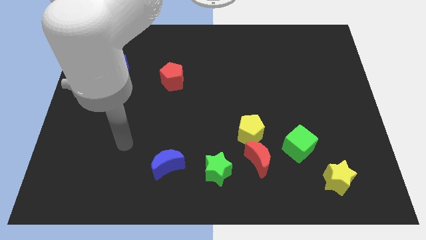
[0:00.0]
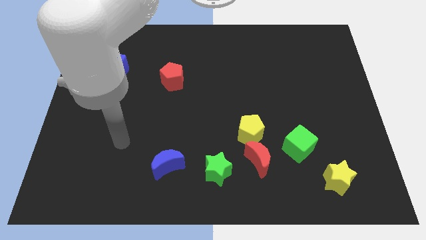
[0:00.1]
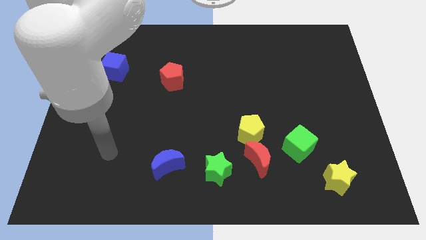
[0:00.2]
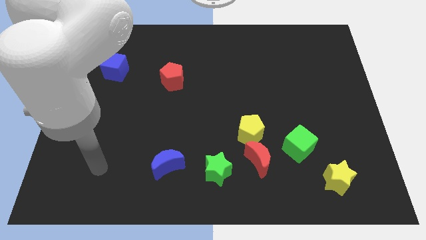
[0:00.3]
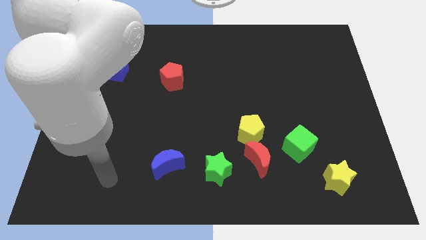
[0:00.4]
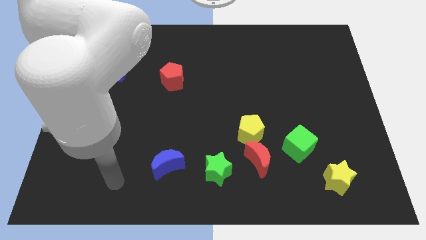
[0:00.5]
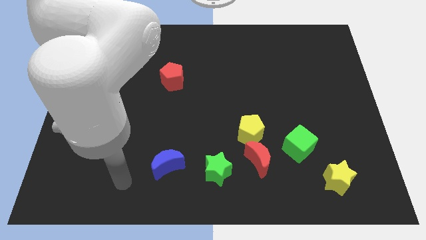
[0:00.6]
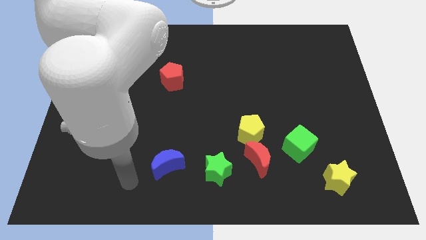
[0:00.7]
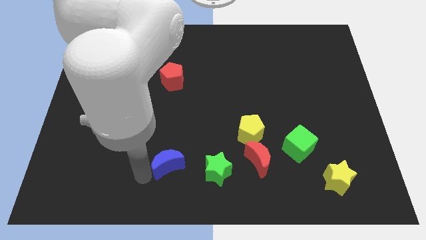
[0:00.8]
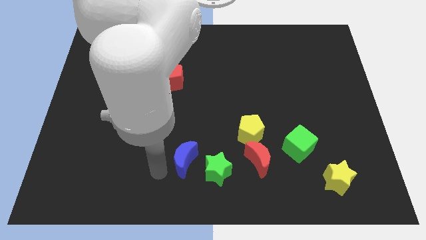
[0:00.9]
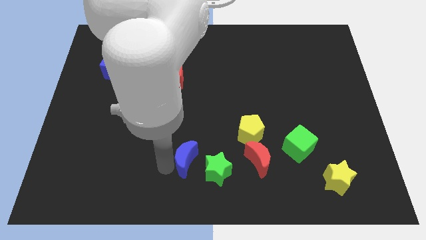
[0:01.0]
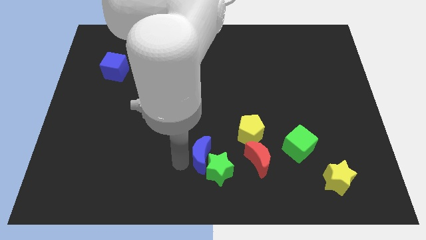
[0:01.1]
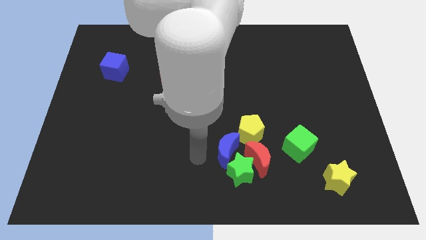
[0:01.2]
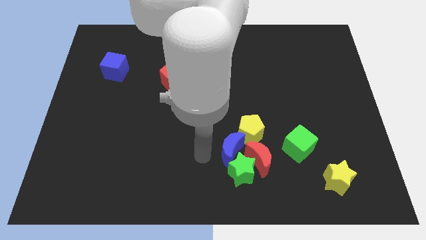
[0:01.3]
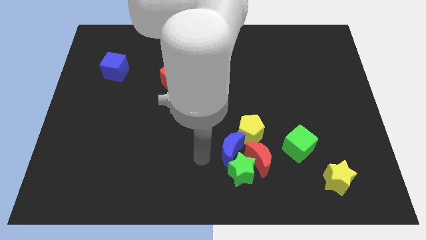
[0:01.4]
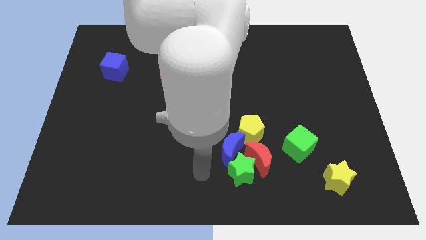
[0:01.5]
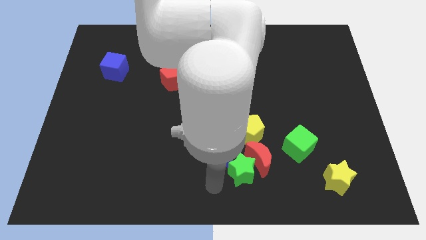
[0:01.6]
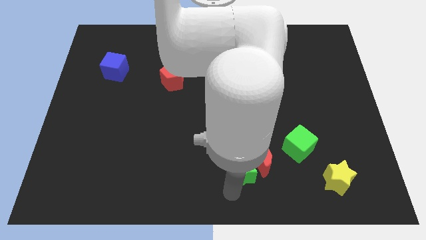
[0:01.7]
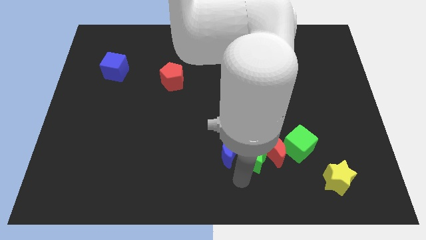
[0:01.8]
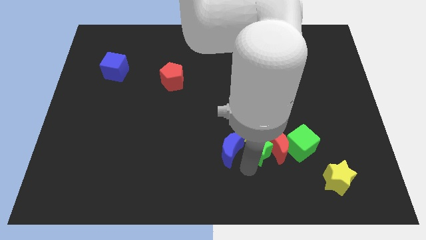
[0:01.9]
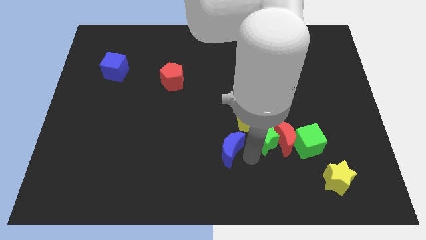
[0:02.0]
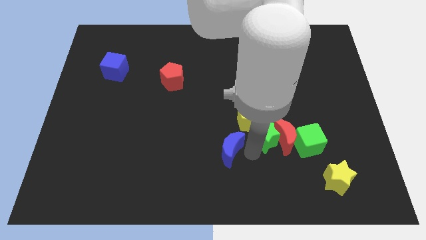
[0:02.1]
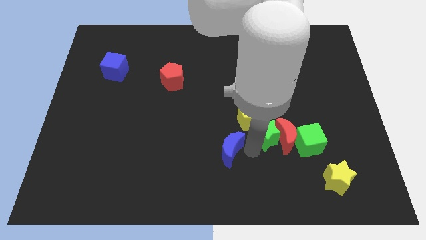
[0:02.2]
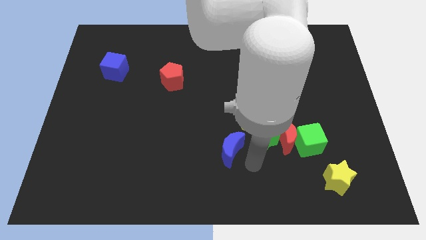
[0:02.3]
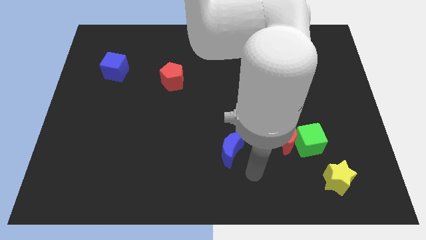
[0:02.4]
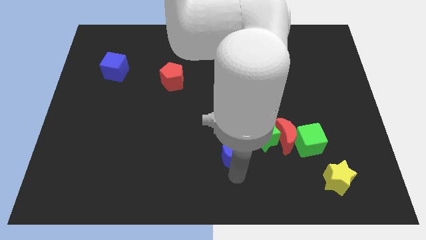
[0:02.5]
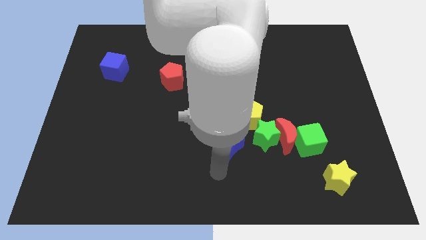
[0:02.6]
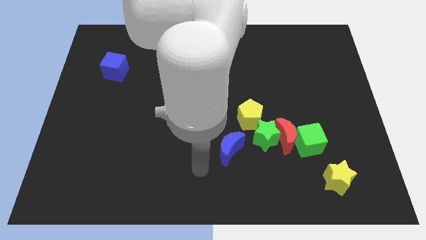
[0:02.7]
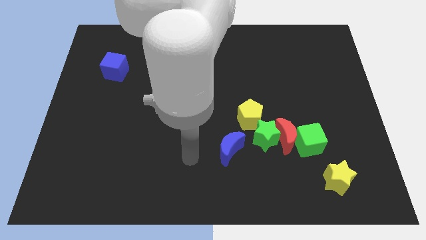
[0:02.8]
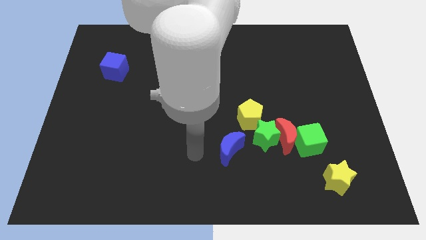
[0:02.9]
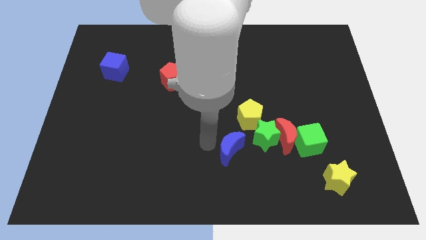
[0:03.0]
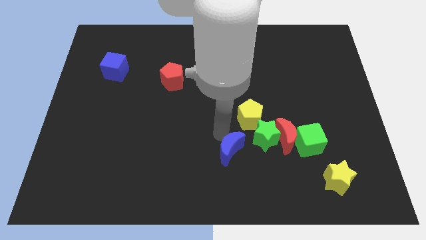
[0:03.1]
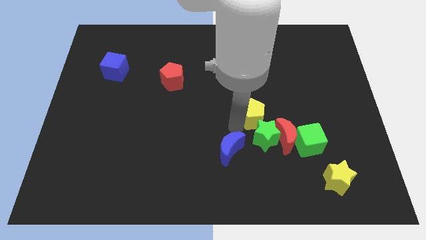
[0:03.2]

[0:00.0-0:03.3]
push the blue crescent near to the group of blocks

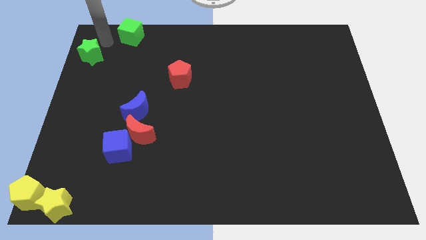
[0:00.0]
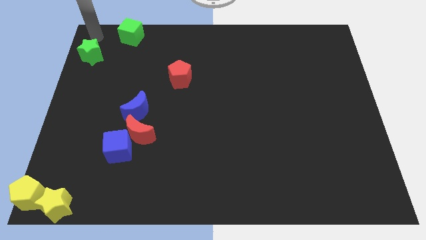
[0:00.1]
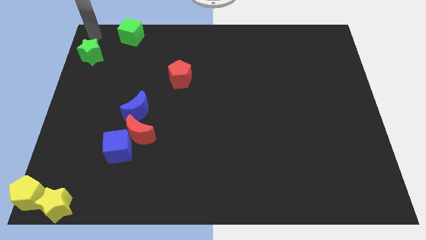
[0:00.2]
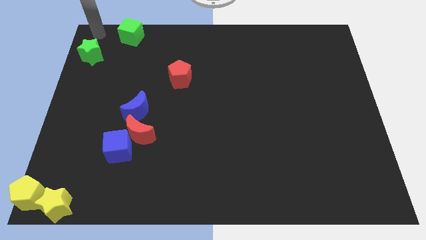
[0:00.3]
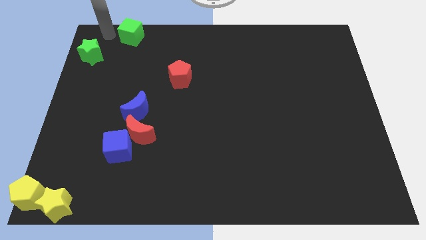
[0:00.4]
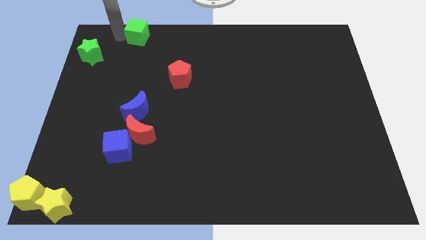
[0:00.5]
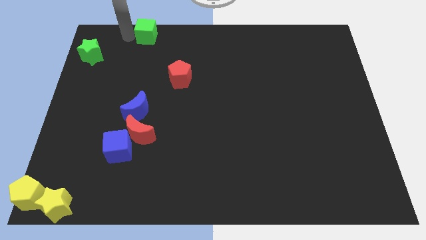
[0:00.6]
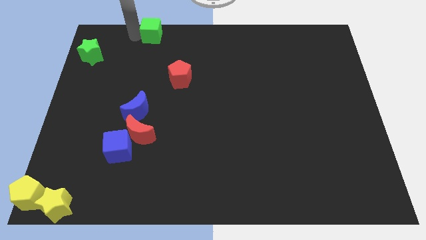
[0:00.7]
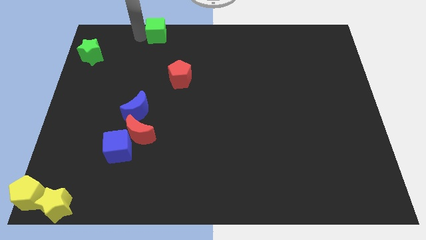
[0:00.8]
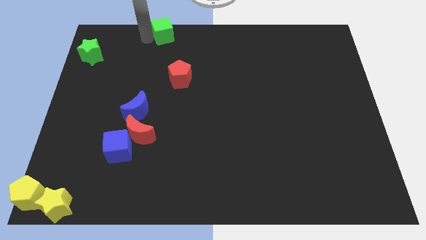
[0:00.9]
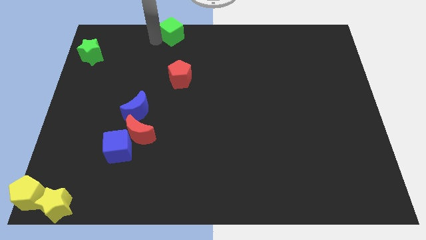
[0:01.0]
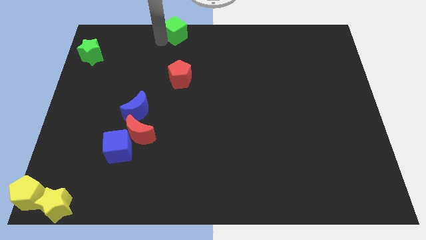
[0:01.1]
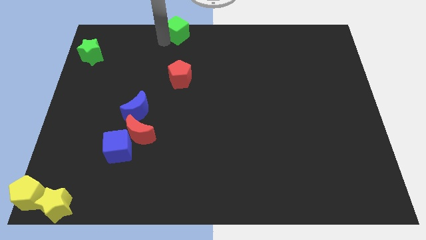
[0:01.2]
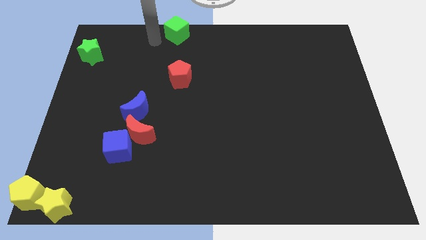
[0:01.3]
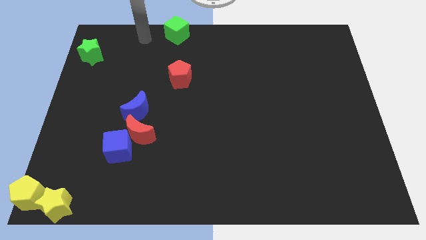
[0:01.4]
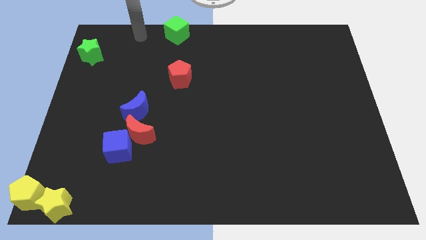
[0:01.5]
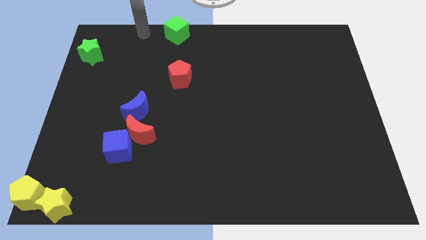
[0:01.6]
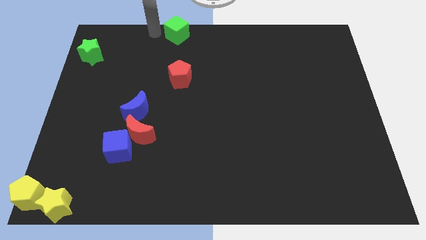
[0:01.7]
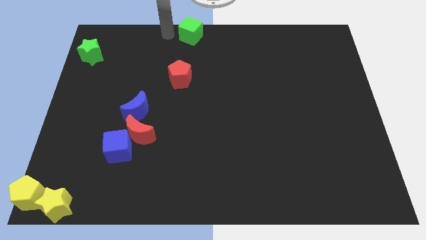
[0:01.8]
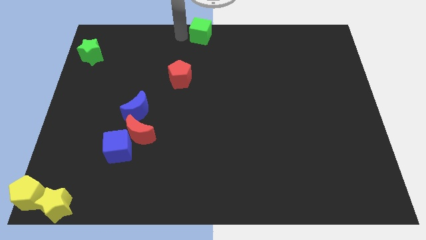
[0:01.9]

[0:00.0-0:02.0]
push the green cube towards the top center

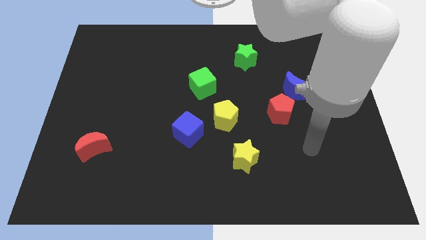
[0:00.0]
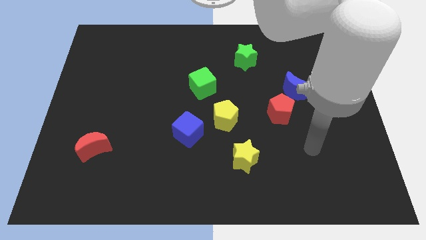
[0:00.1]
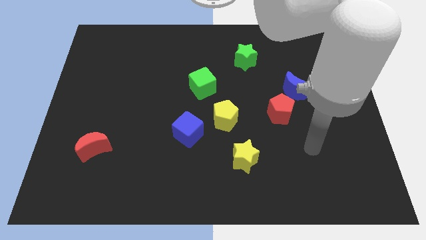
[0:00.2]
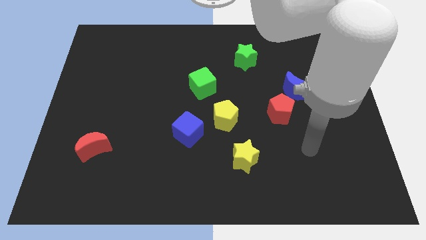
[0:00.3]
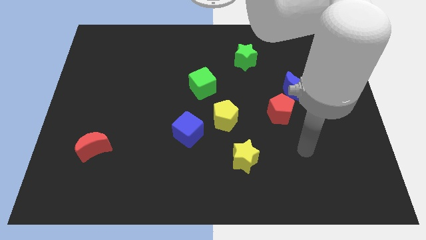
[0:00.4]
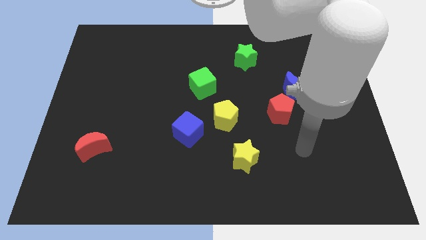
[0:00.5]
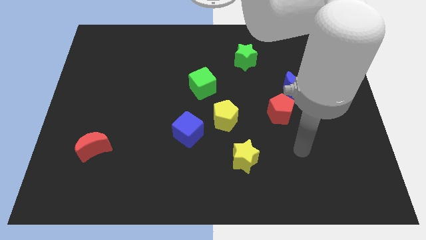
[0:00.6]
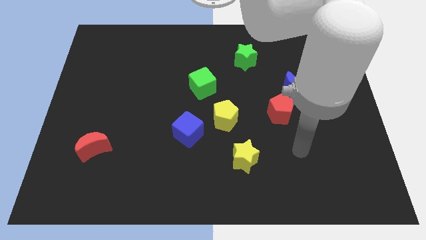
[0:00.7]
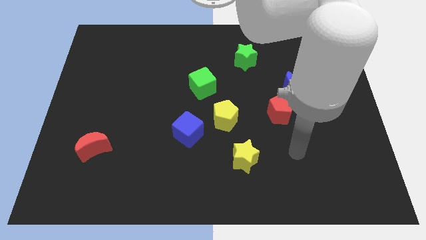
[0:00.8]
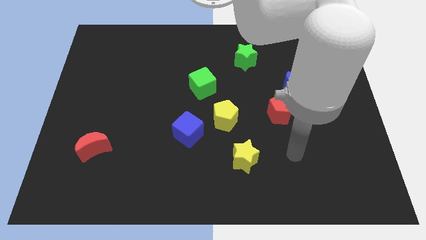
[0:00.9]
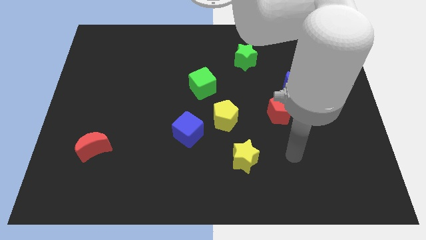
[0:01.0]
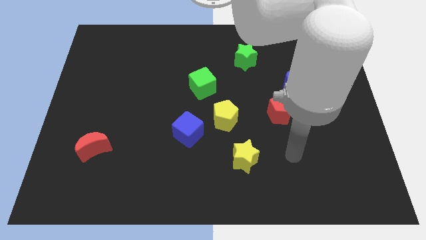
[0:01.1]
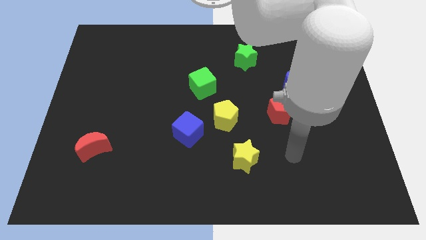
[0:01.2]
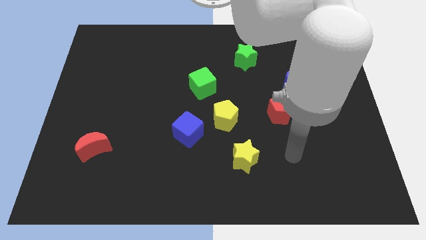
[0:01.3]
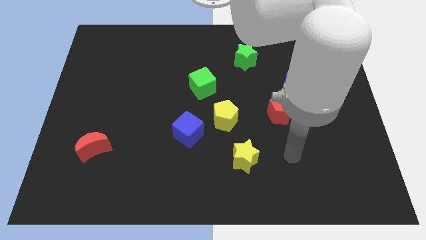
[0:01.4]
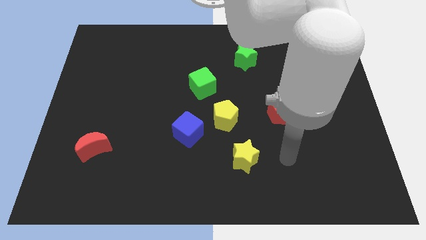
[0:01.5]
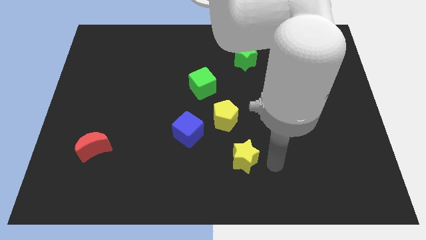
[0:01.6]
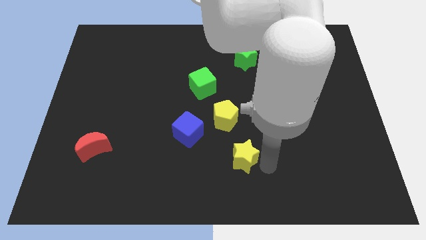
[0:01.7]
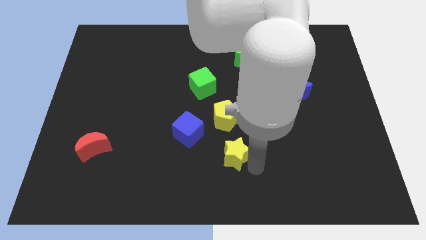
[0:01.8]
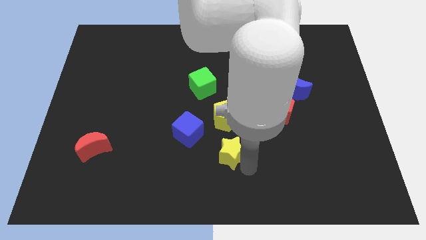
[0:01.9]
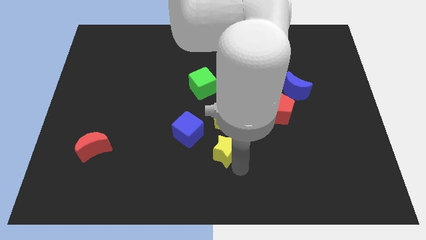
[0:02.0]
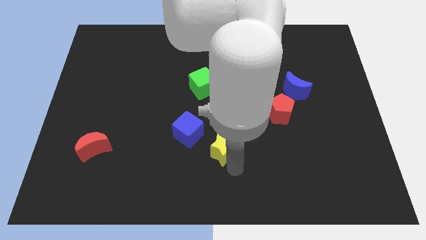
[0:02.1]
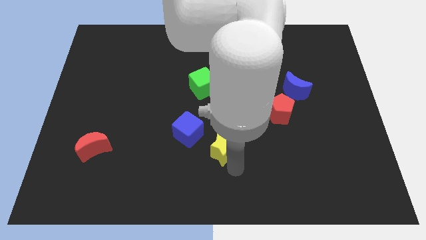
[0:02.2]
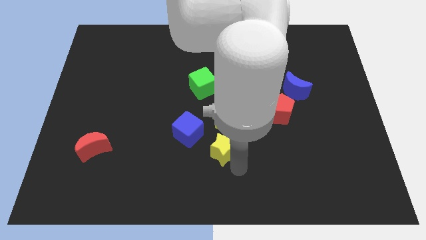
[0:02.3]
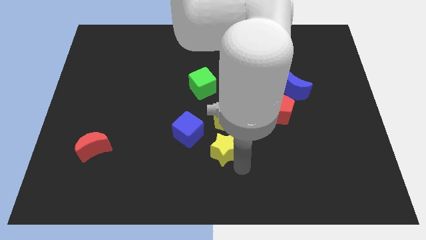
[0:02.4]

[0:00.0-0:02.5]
move the yellow star towards the blue cube

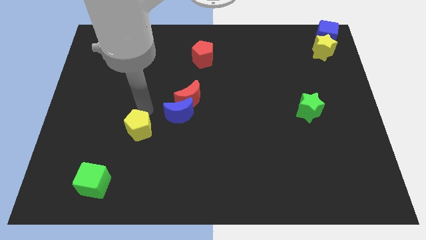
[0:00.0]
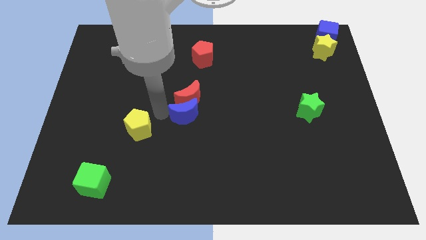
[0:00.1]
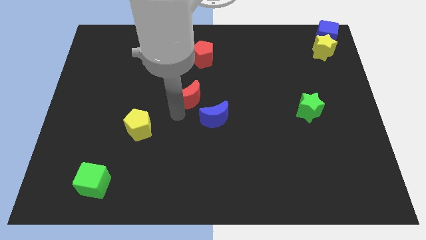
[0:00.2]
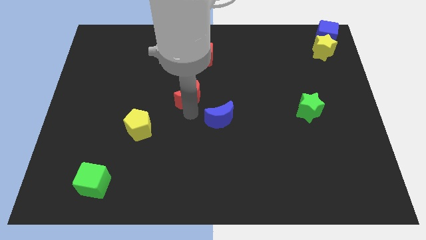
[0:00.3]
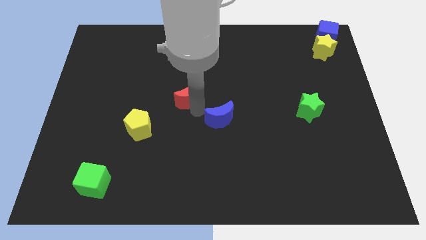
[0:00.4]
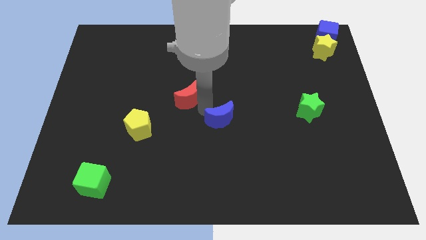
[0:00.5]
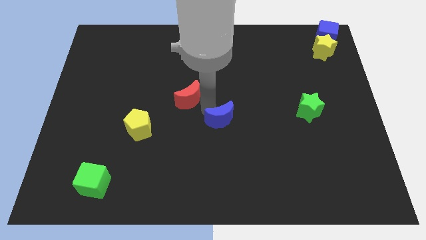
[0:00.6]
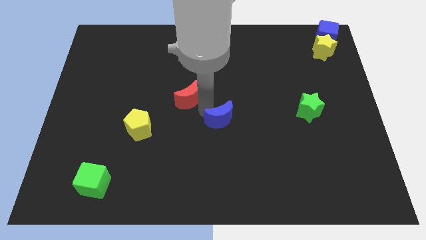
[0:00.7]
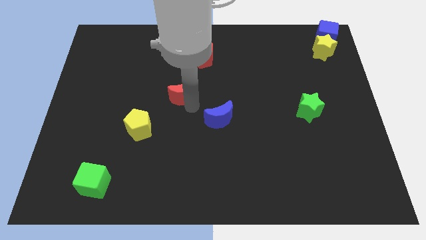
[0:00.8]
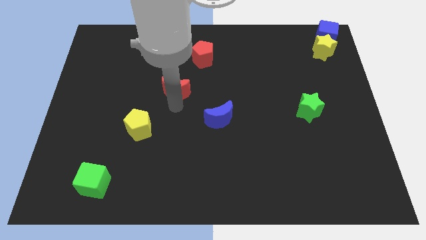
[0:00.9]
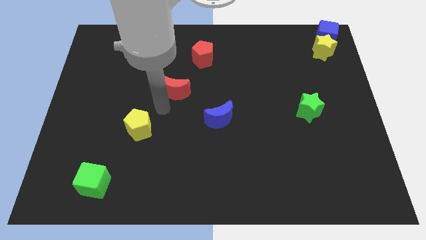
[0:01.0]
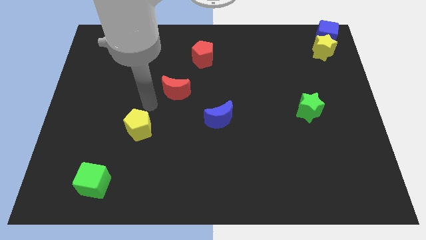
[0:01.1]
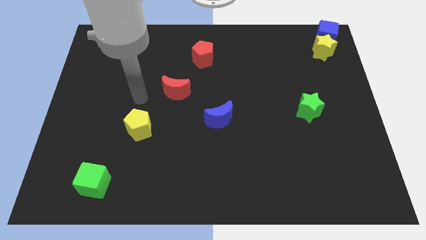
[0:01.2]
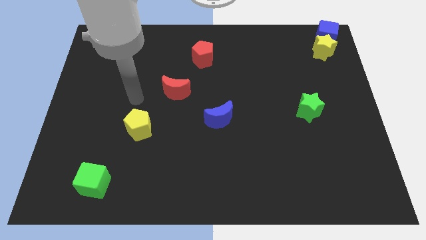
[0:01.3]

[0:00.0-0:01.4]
separate the red and blue crescents

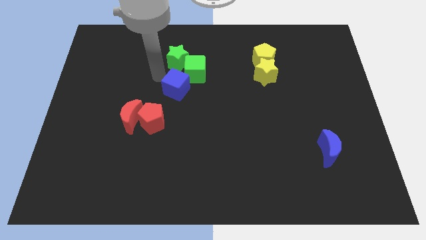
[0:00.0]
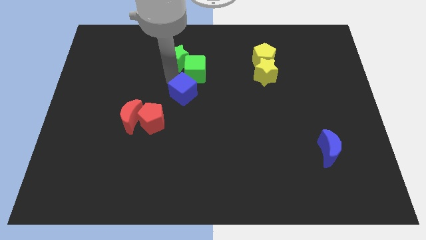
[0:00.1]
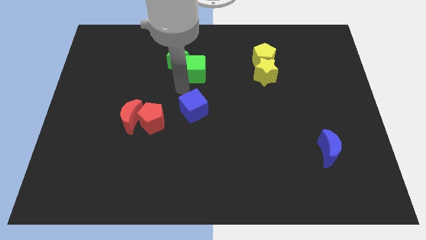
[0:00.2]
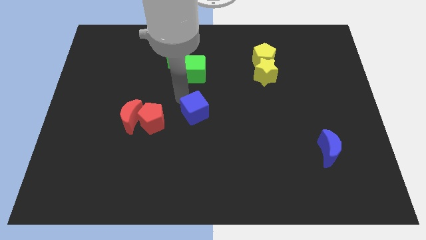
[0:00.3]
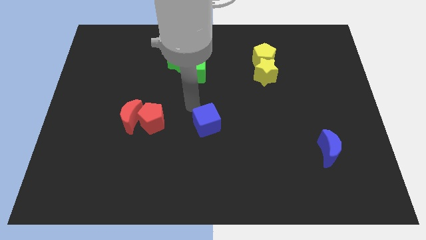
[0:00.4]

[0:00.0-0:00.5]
push the blue cube to the center of the board
